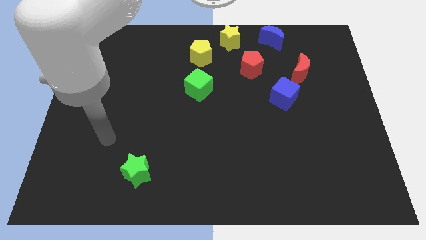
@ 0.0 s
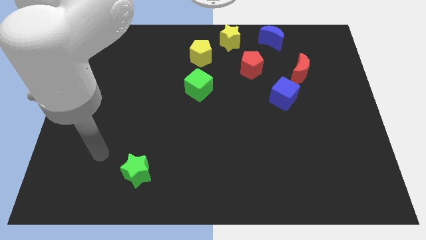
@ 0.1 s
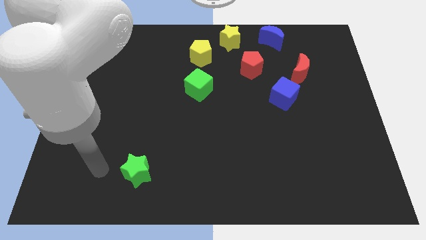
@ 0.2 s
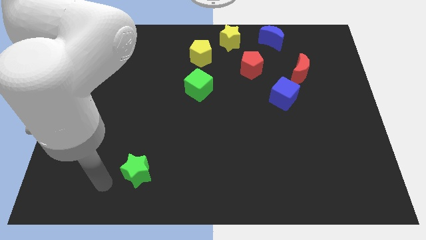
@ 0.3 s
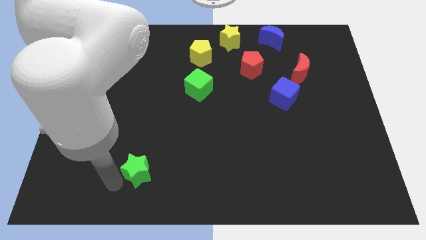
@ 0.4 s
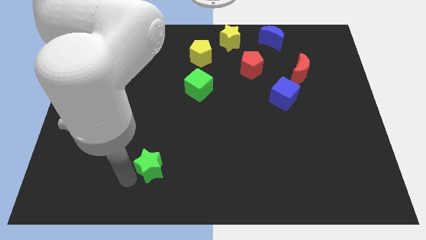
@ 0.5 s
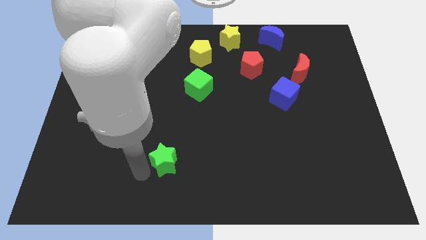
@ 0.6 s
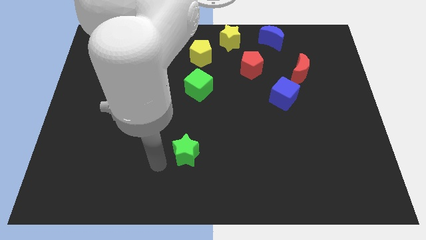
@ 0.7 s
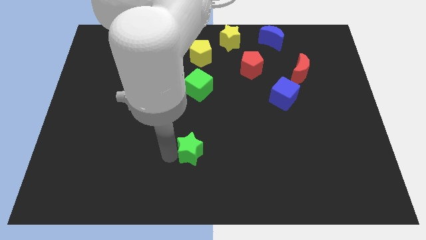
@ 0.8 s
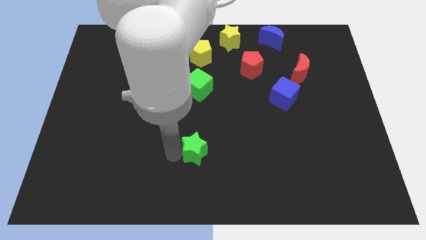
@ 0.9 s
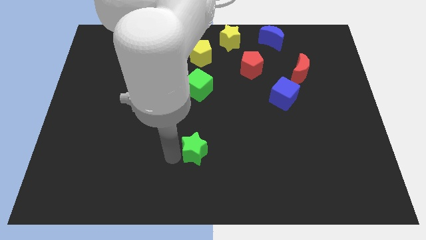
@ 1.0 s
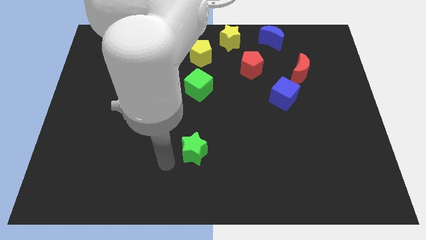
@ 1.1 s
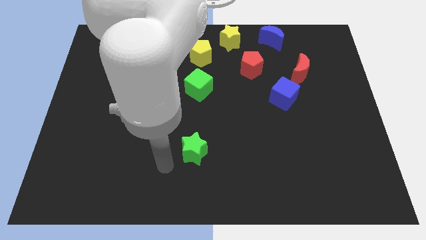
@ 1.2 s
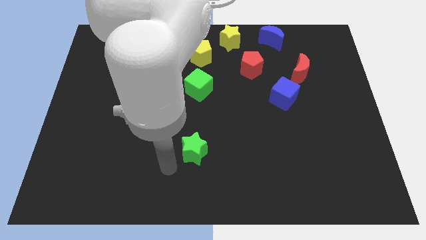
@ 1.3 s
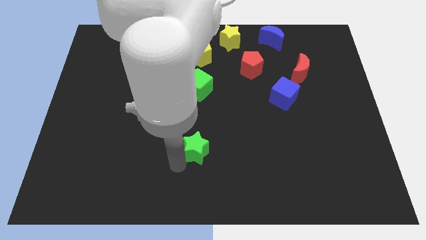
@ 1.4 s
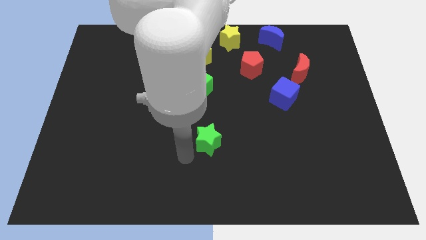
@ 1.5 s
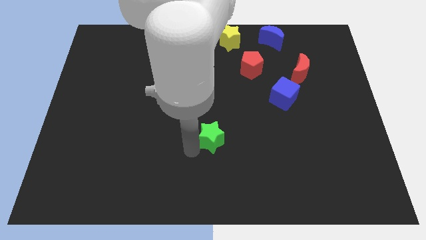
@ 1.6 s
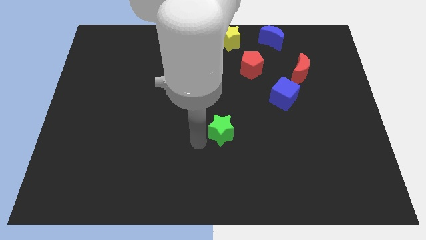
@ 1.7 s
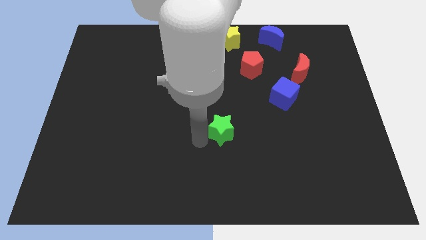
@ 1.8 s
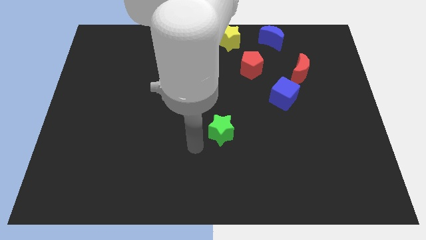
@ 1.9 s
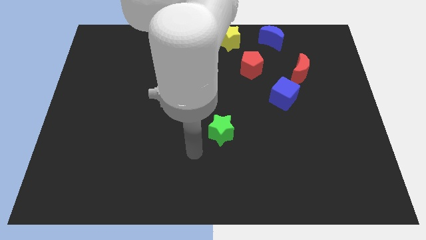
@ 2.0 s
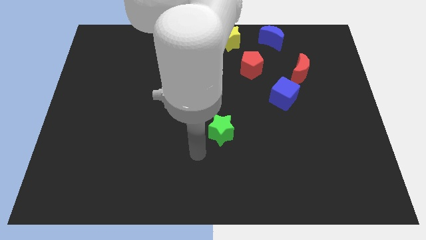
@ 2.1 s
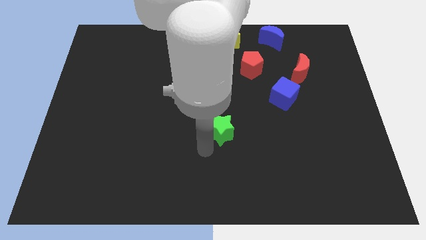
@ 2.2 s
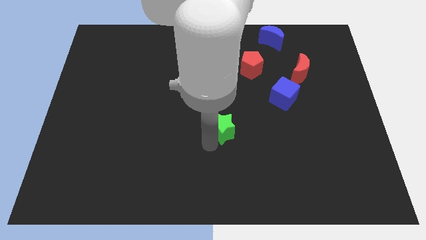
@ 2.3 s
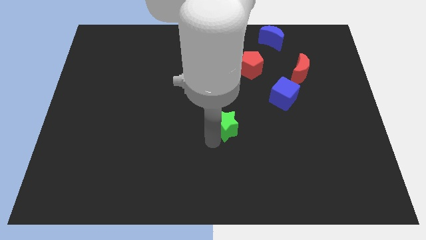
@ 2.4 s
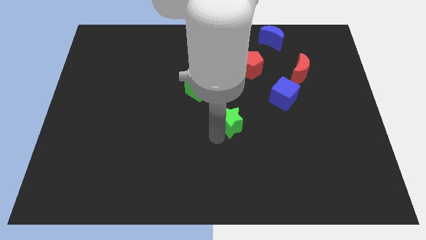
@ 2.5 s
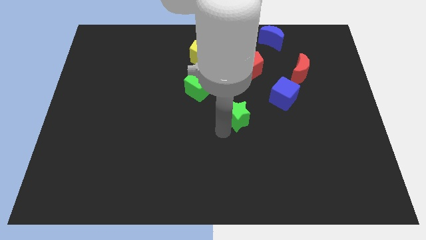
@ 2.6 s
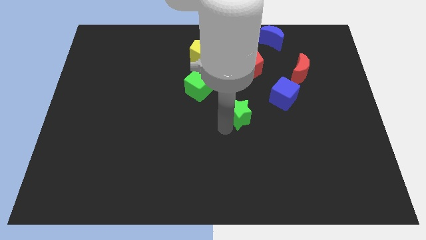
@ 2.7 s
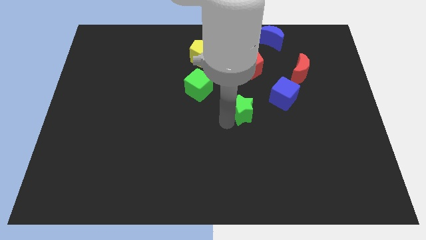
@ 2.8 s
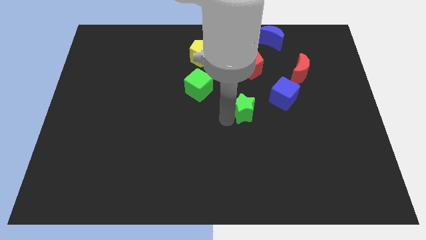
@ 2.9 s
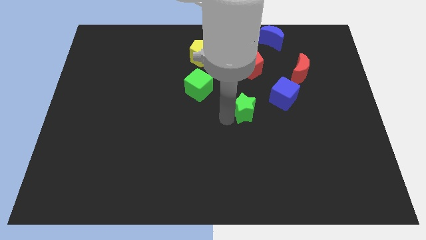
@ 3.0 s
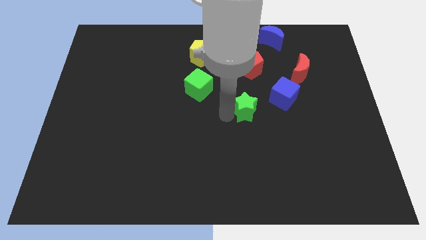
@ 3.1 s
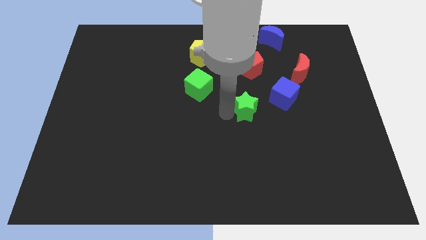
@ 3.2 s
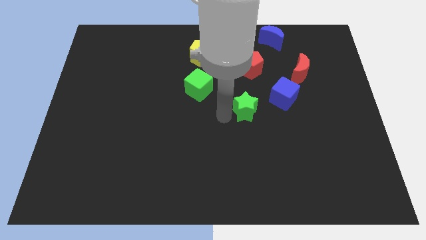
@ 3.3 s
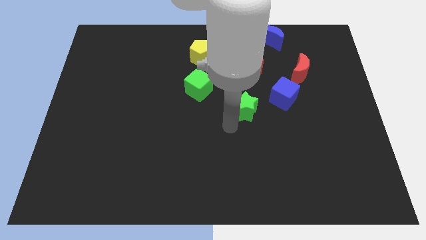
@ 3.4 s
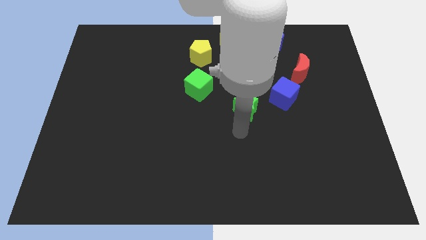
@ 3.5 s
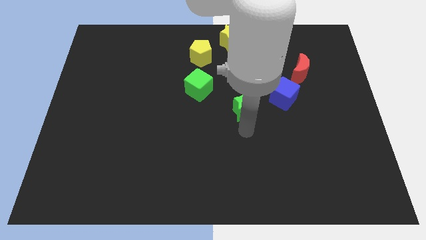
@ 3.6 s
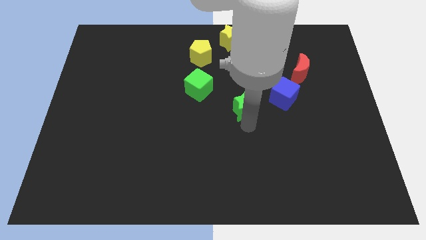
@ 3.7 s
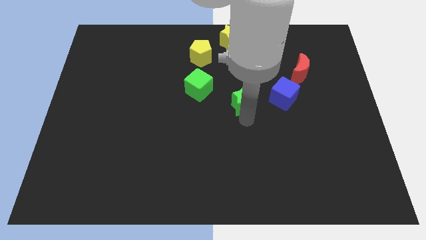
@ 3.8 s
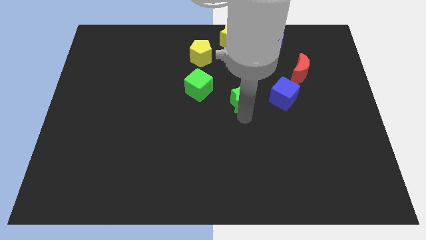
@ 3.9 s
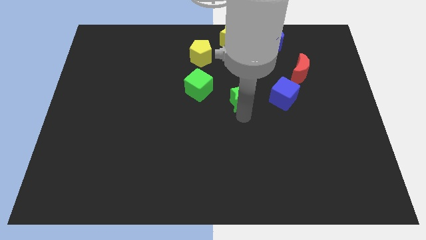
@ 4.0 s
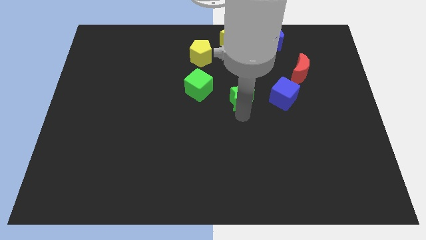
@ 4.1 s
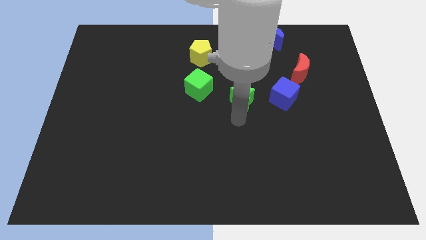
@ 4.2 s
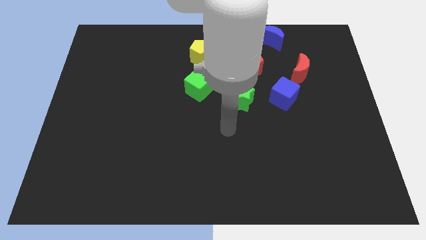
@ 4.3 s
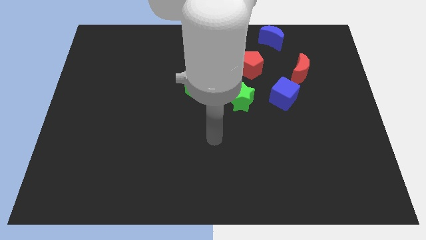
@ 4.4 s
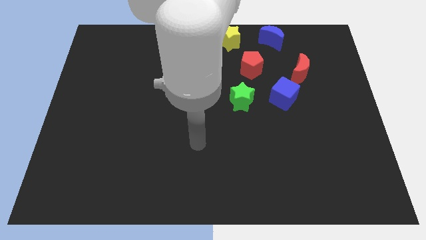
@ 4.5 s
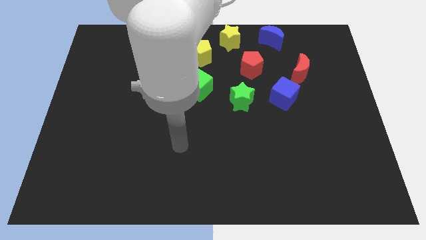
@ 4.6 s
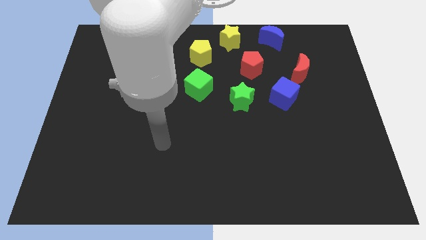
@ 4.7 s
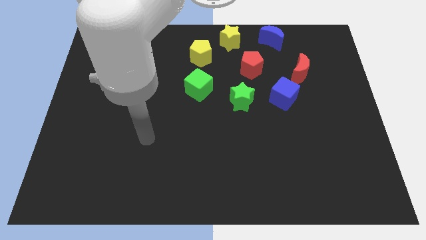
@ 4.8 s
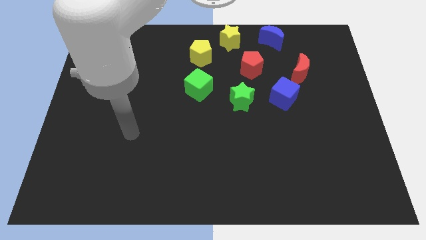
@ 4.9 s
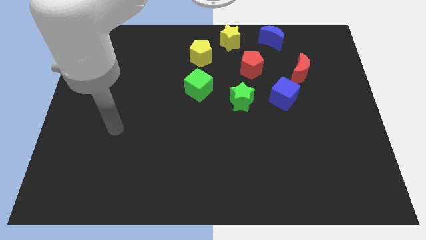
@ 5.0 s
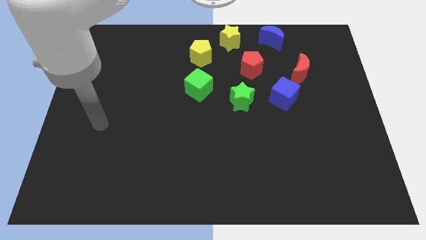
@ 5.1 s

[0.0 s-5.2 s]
push the green star to the bottom of the red pentagon

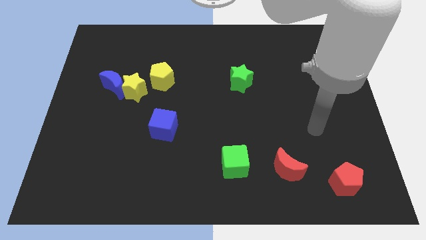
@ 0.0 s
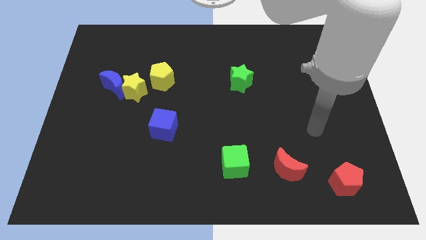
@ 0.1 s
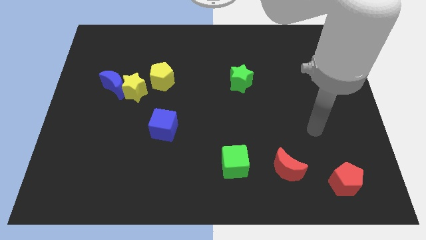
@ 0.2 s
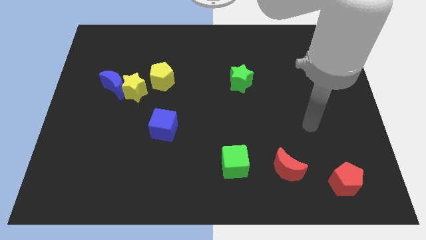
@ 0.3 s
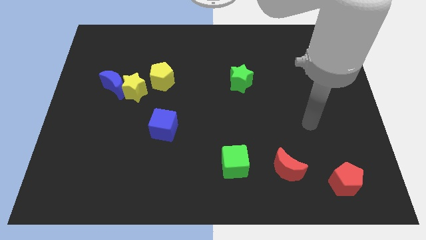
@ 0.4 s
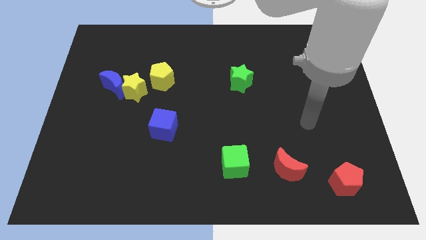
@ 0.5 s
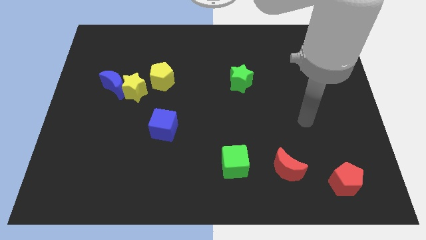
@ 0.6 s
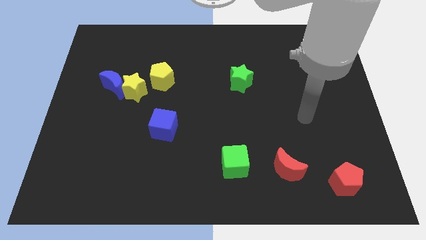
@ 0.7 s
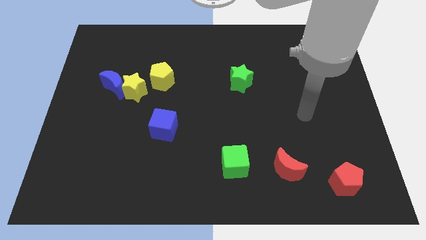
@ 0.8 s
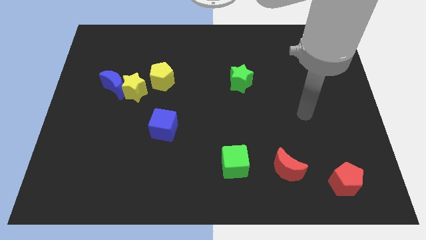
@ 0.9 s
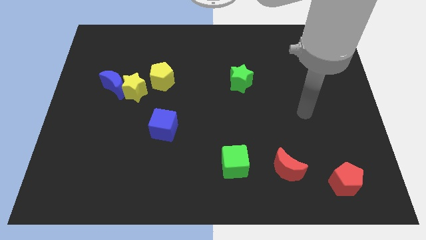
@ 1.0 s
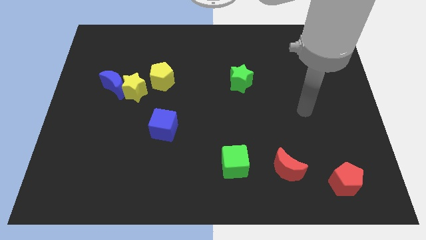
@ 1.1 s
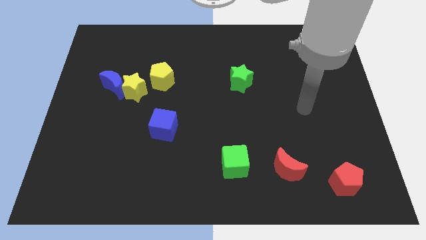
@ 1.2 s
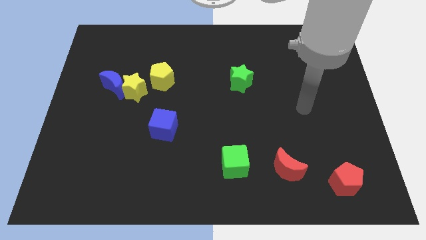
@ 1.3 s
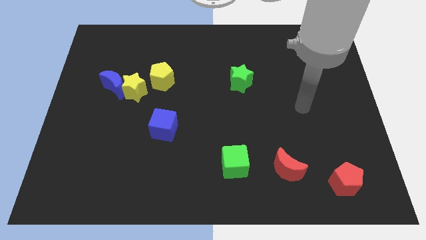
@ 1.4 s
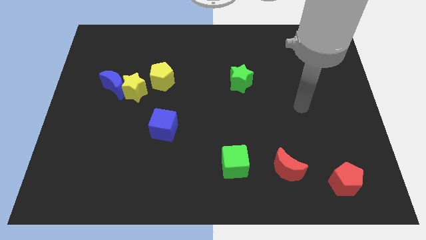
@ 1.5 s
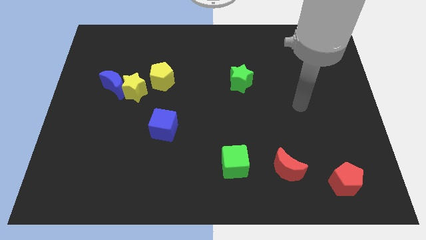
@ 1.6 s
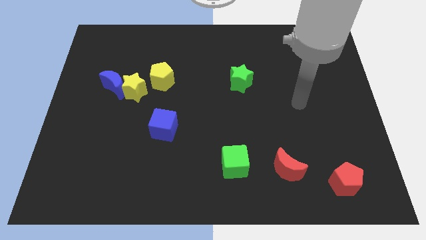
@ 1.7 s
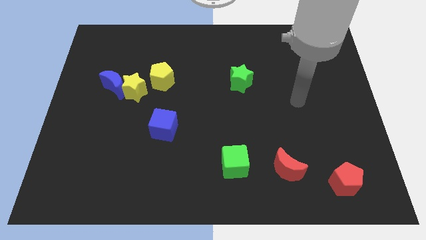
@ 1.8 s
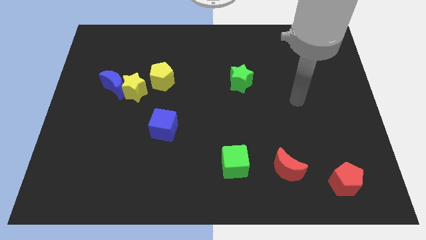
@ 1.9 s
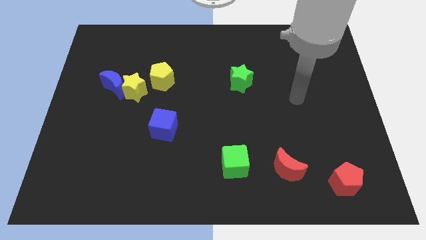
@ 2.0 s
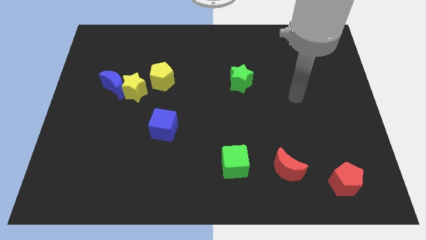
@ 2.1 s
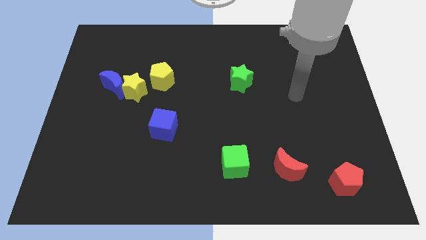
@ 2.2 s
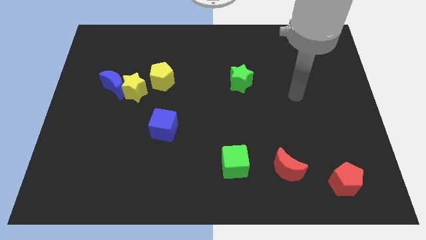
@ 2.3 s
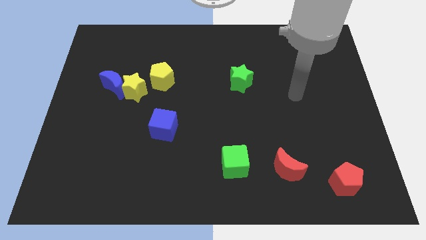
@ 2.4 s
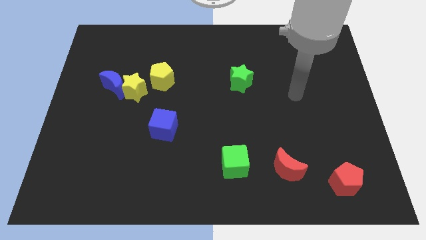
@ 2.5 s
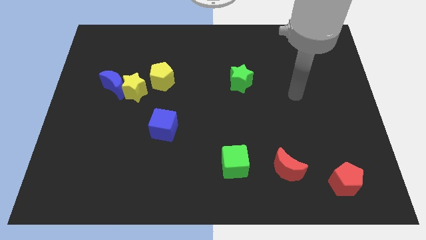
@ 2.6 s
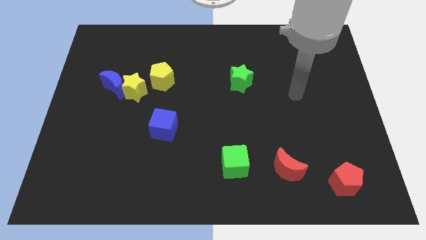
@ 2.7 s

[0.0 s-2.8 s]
move your arm upwards

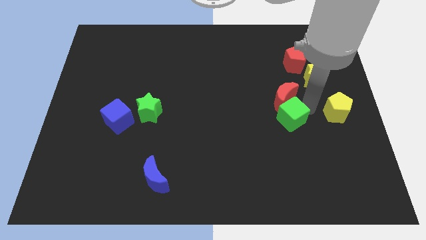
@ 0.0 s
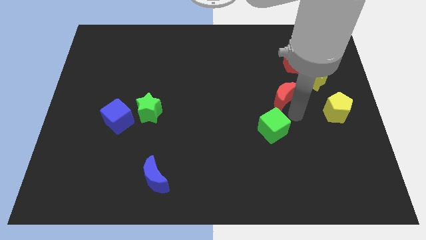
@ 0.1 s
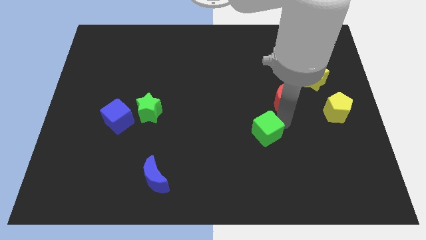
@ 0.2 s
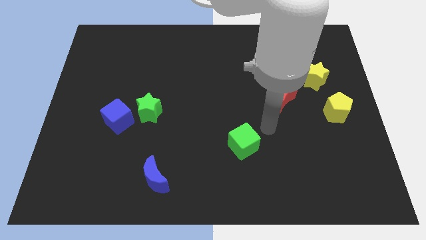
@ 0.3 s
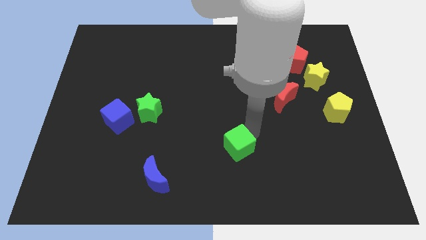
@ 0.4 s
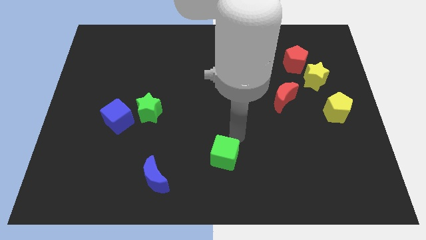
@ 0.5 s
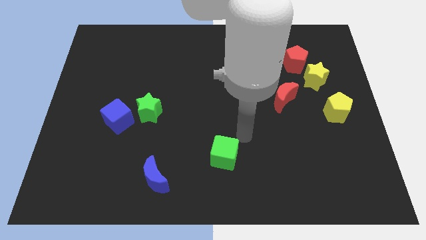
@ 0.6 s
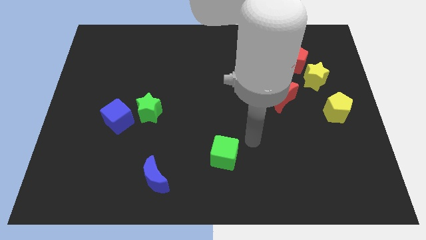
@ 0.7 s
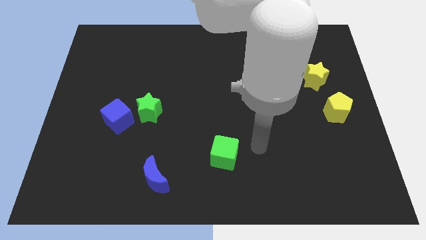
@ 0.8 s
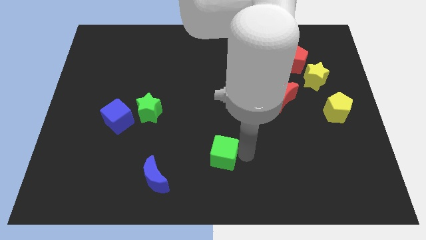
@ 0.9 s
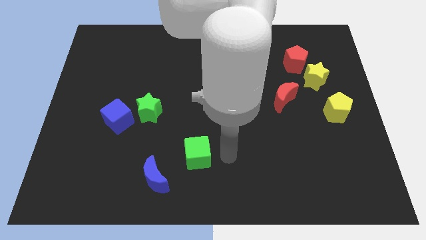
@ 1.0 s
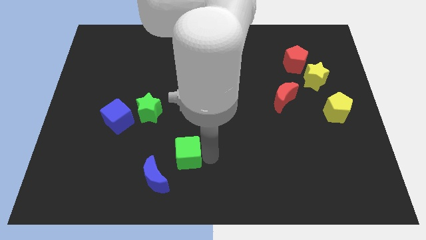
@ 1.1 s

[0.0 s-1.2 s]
separate the green cube and the red crescent
